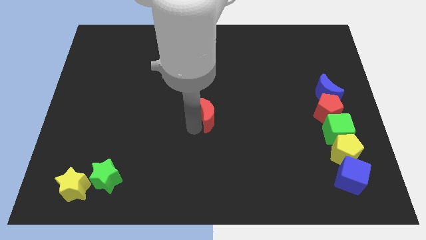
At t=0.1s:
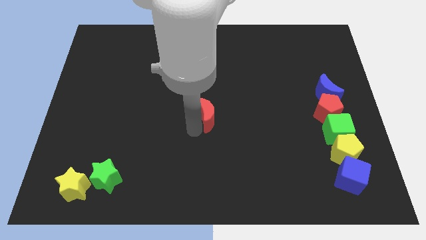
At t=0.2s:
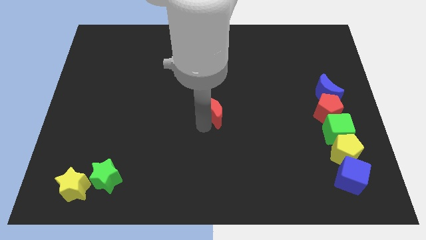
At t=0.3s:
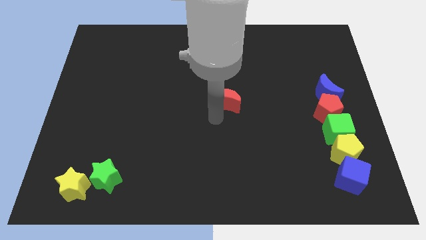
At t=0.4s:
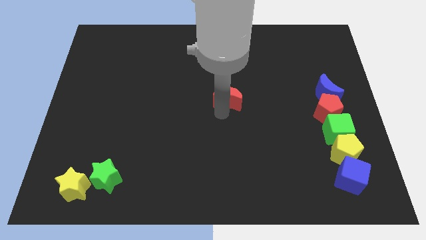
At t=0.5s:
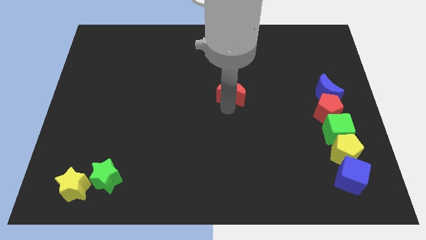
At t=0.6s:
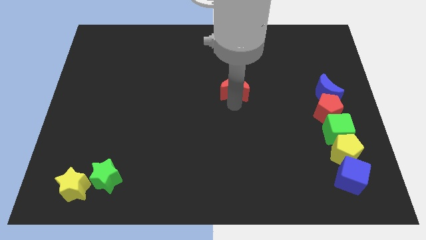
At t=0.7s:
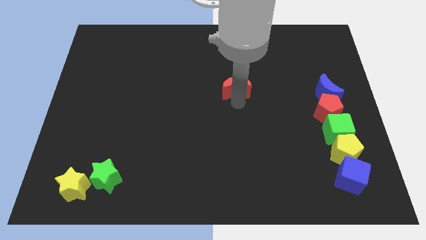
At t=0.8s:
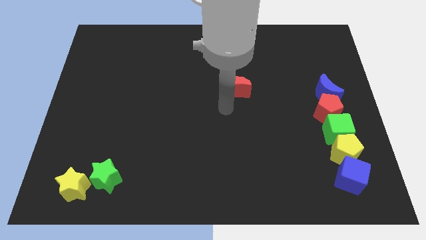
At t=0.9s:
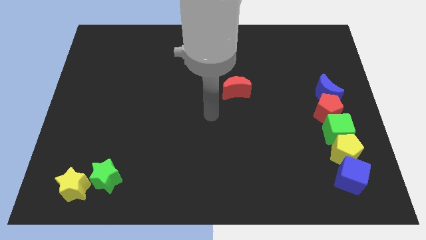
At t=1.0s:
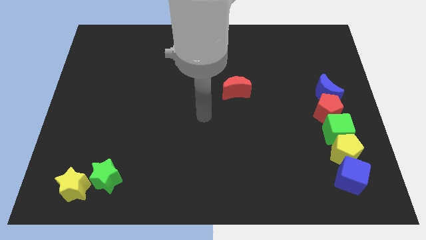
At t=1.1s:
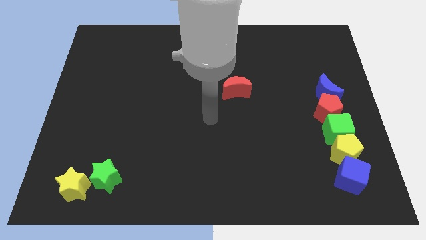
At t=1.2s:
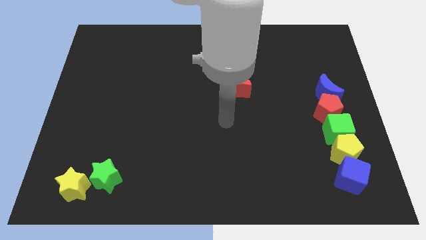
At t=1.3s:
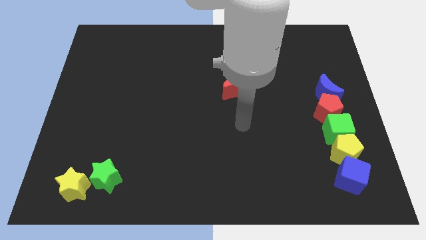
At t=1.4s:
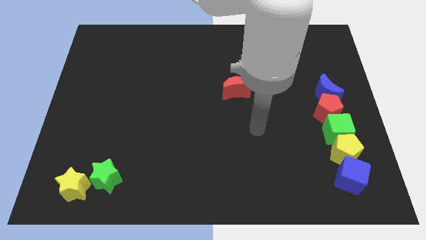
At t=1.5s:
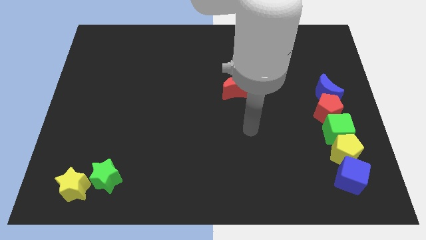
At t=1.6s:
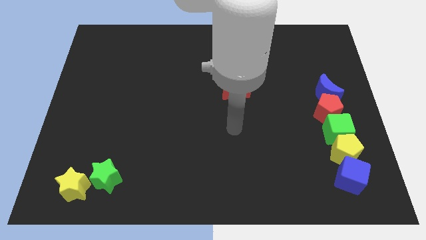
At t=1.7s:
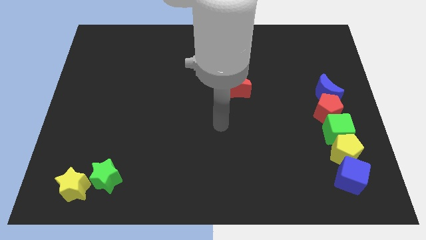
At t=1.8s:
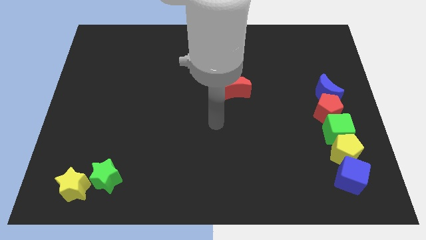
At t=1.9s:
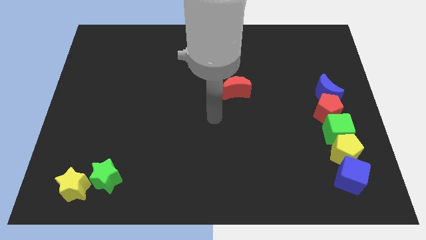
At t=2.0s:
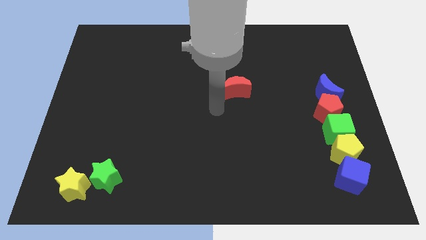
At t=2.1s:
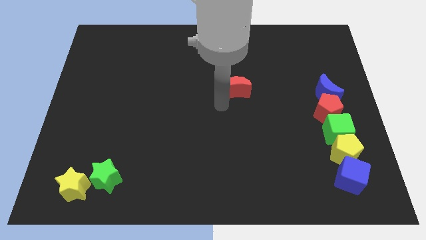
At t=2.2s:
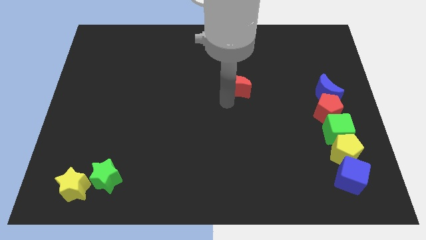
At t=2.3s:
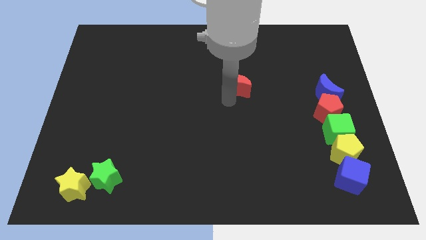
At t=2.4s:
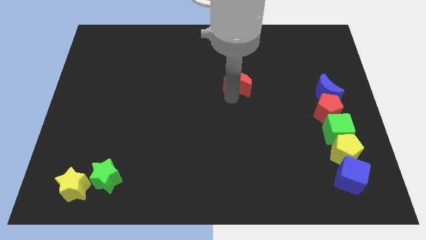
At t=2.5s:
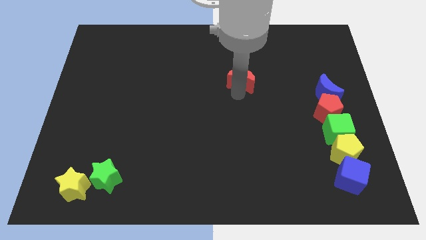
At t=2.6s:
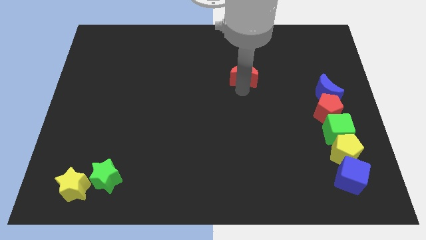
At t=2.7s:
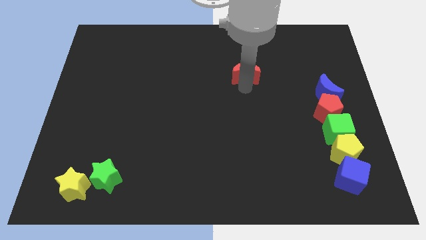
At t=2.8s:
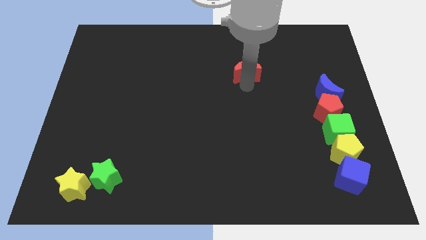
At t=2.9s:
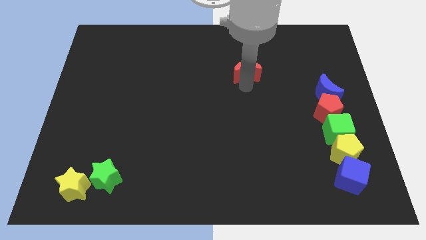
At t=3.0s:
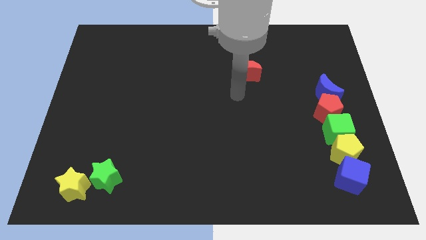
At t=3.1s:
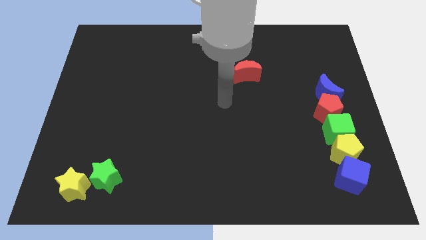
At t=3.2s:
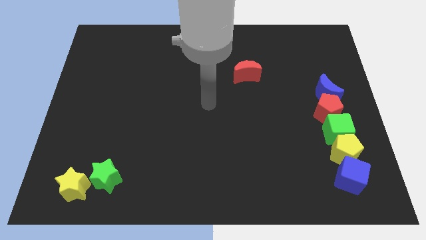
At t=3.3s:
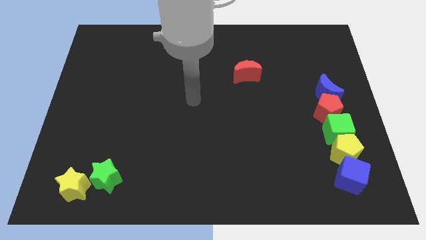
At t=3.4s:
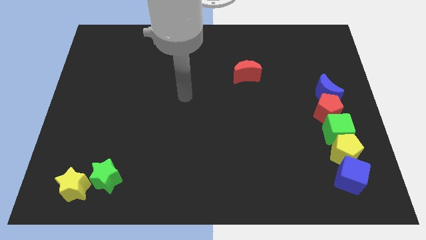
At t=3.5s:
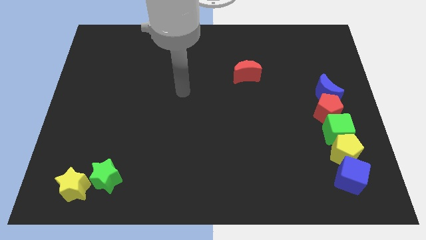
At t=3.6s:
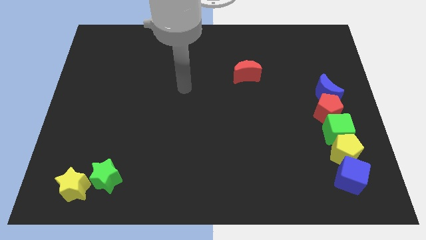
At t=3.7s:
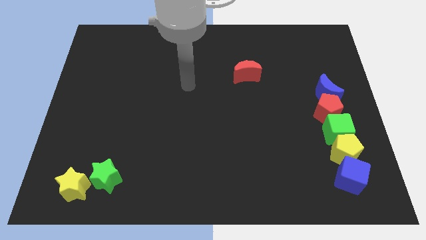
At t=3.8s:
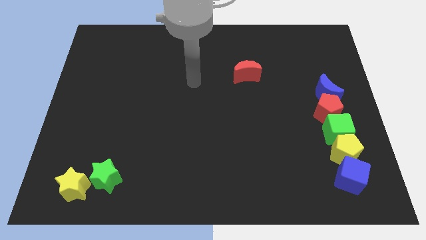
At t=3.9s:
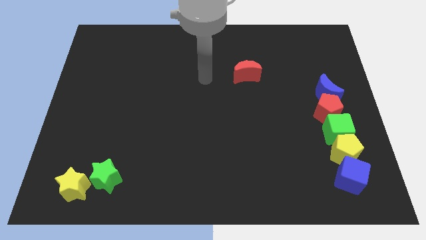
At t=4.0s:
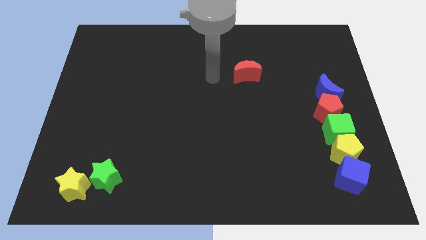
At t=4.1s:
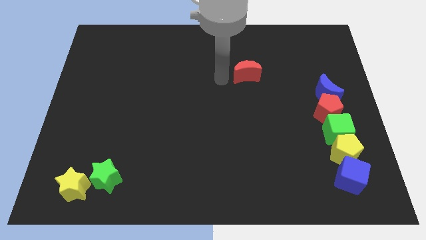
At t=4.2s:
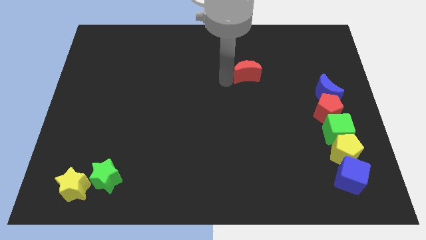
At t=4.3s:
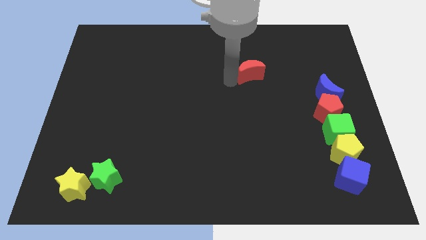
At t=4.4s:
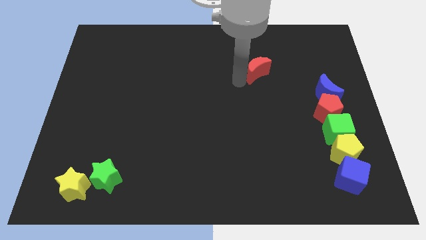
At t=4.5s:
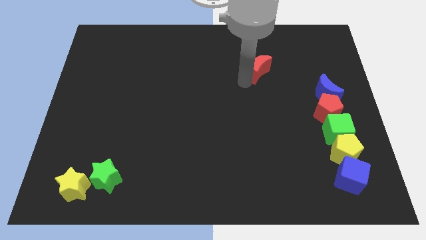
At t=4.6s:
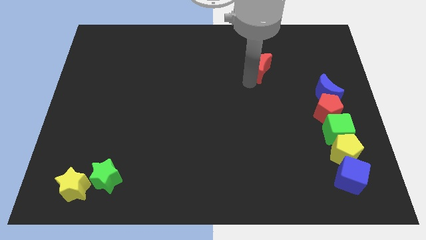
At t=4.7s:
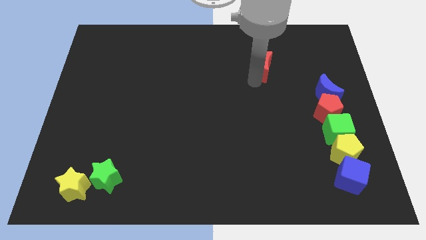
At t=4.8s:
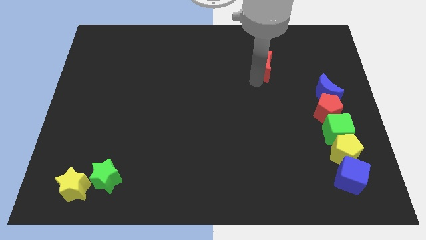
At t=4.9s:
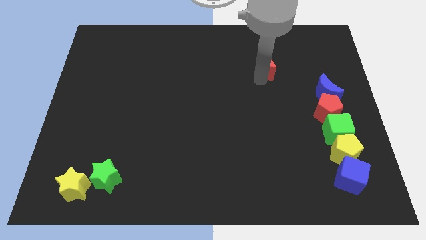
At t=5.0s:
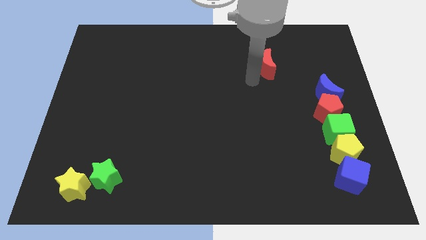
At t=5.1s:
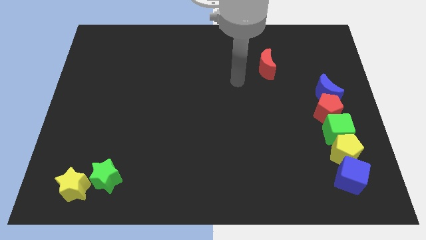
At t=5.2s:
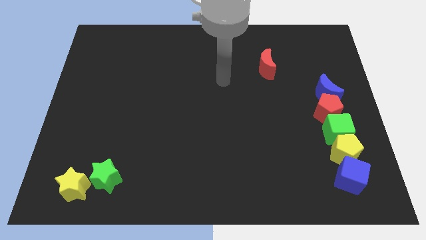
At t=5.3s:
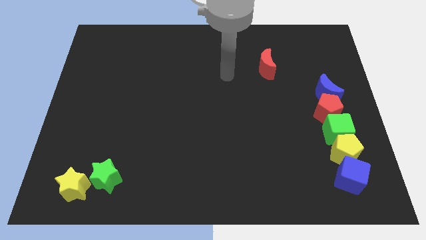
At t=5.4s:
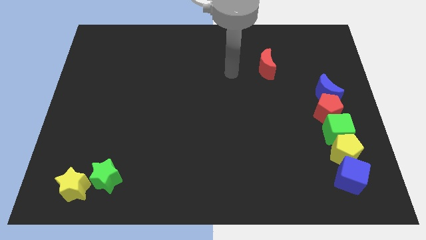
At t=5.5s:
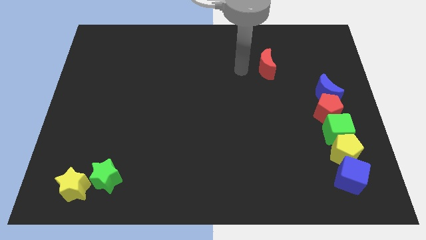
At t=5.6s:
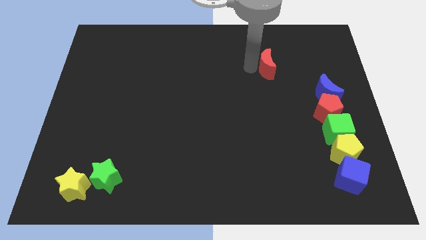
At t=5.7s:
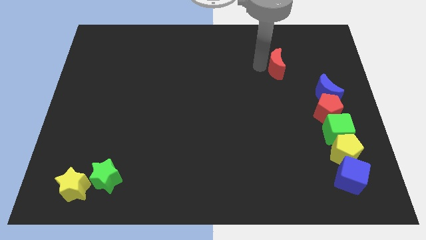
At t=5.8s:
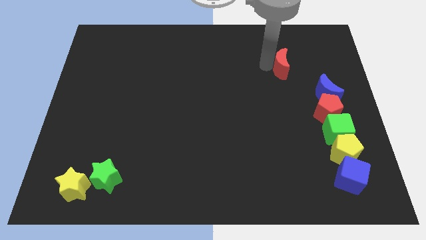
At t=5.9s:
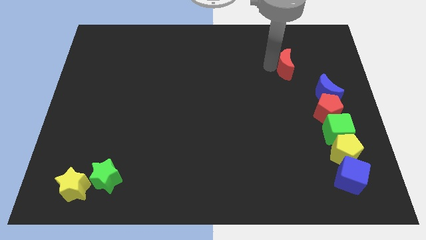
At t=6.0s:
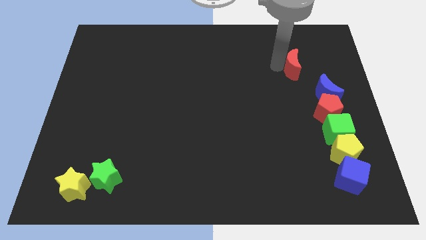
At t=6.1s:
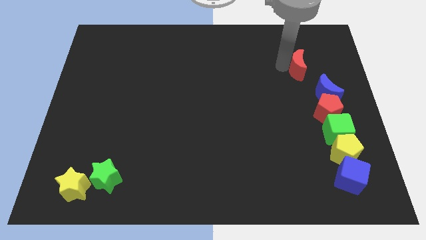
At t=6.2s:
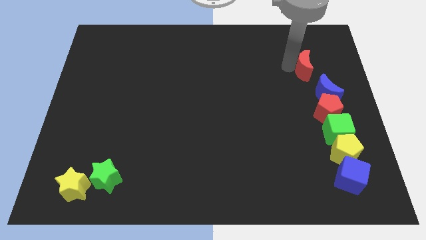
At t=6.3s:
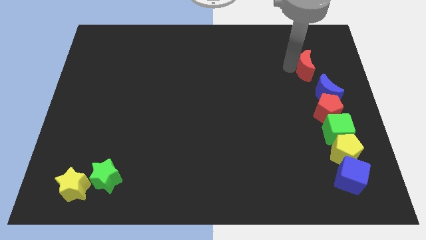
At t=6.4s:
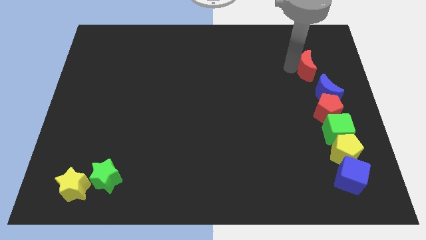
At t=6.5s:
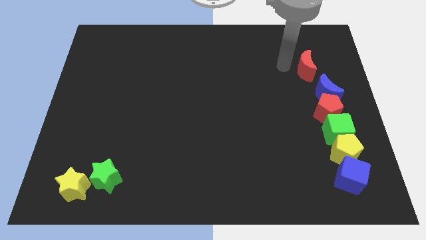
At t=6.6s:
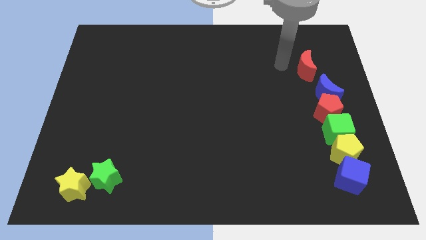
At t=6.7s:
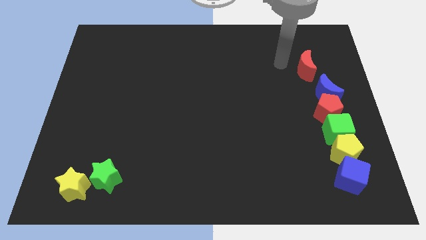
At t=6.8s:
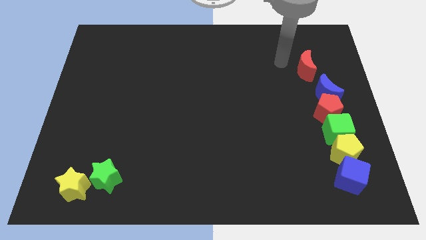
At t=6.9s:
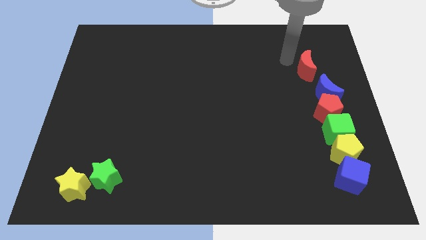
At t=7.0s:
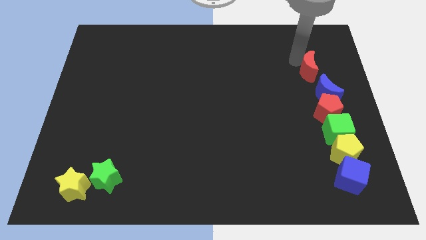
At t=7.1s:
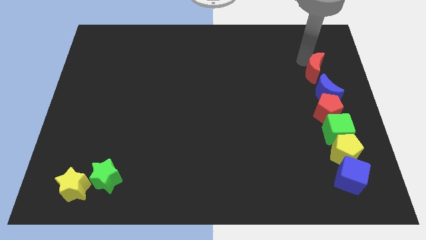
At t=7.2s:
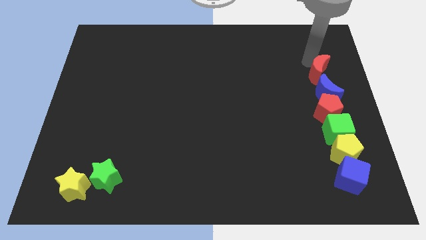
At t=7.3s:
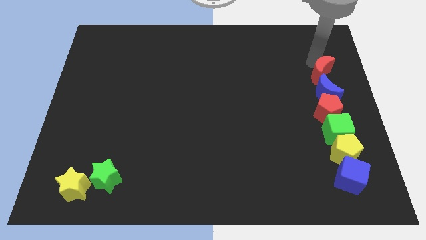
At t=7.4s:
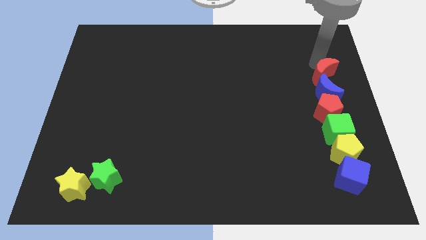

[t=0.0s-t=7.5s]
move red moon above red moon

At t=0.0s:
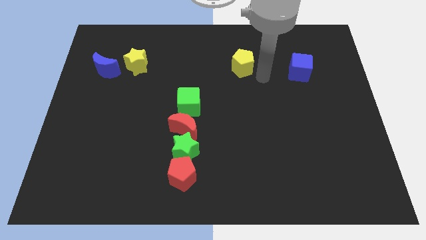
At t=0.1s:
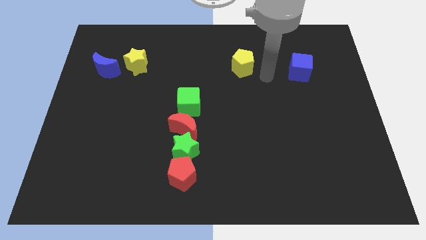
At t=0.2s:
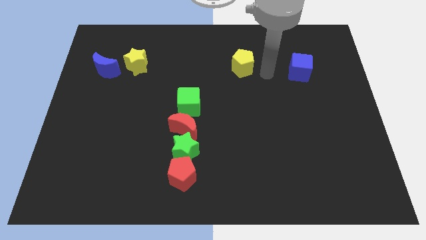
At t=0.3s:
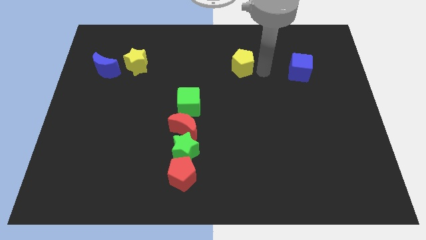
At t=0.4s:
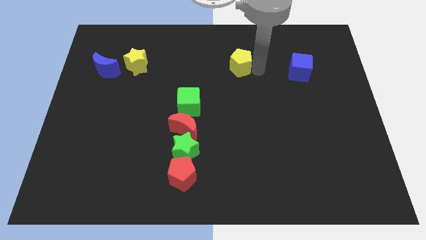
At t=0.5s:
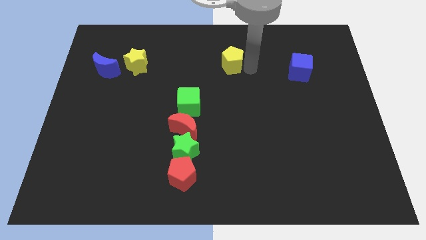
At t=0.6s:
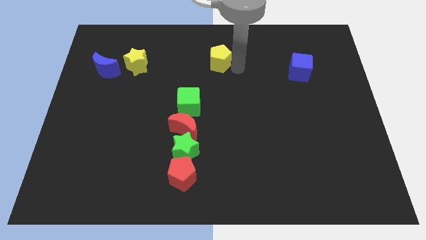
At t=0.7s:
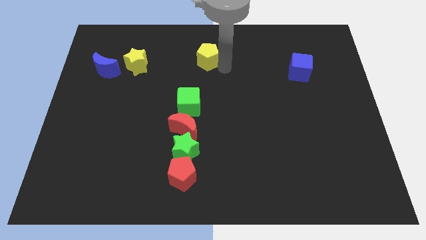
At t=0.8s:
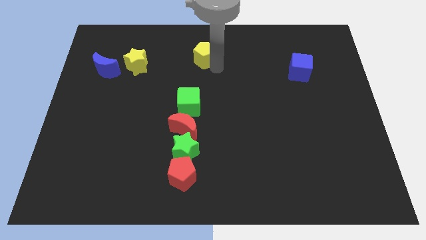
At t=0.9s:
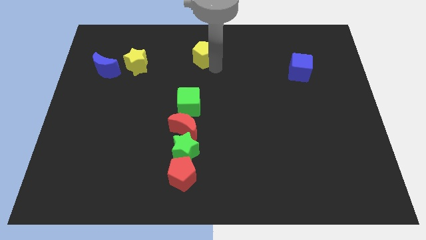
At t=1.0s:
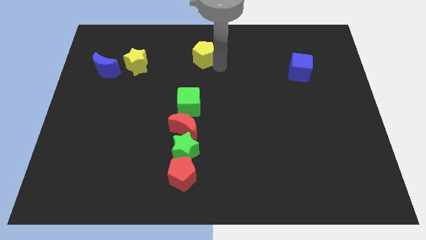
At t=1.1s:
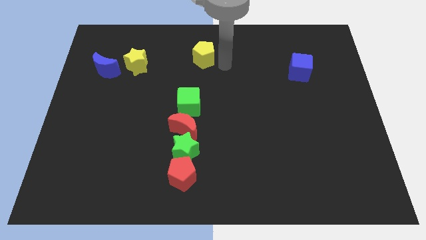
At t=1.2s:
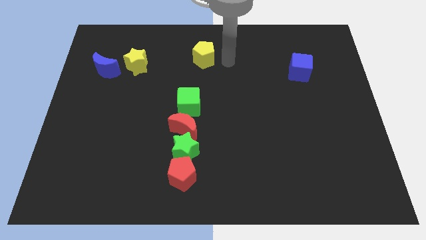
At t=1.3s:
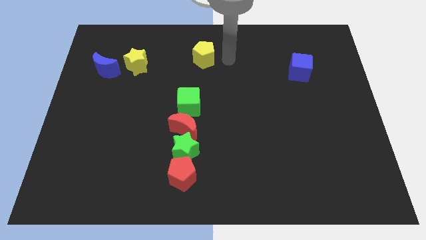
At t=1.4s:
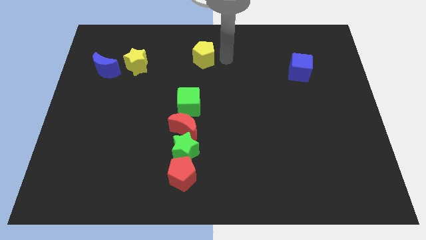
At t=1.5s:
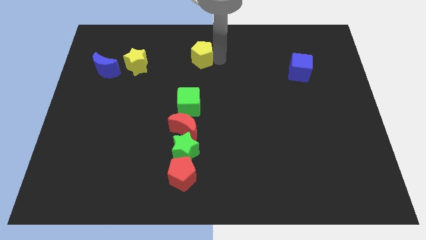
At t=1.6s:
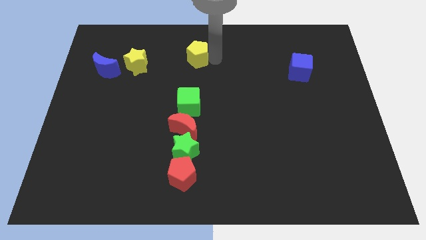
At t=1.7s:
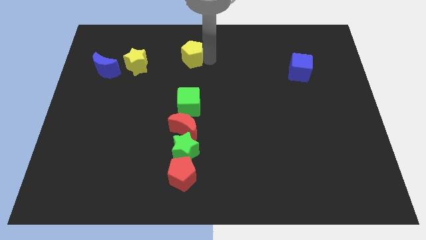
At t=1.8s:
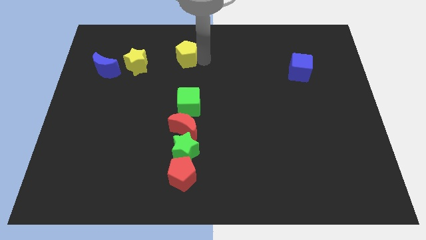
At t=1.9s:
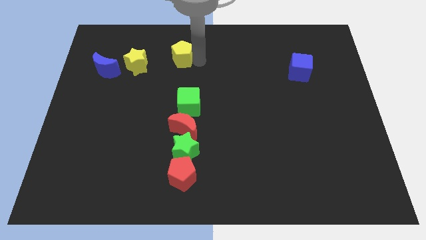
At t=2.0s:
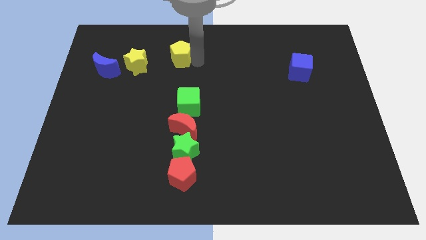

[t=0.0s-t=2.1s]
place the yellow pentagon right to the yellow star
